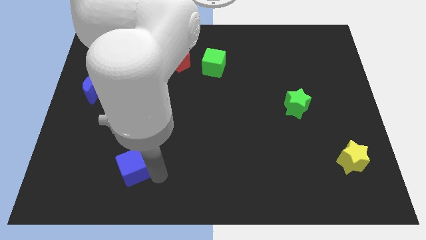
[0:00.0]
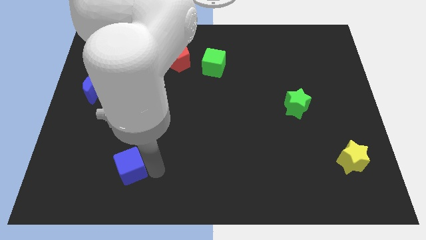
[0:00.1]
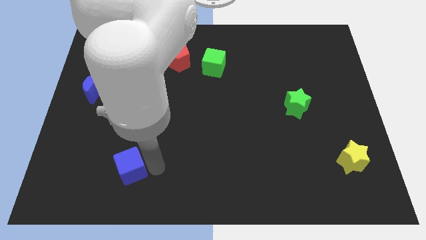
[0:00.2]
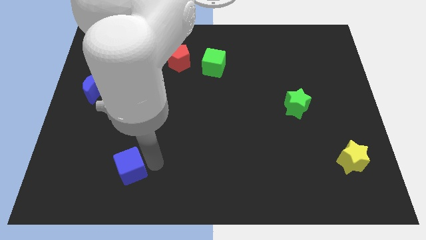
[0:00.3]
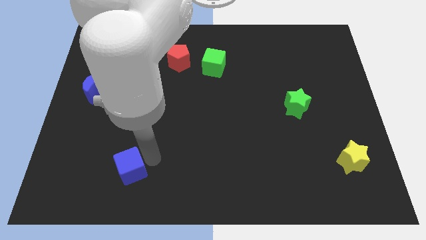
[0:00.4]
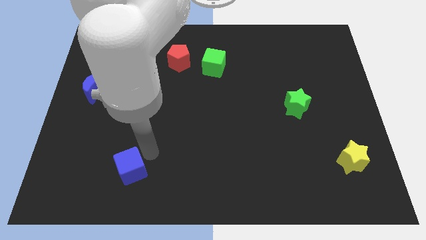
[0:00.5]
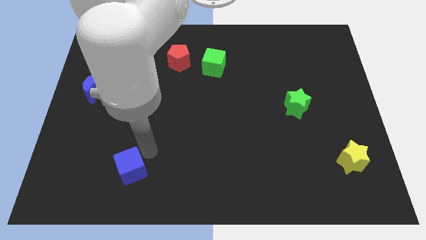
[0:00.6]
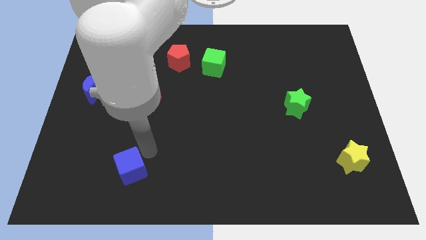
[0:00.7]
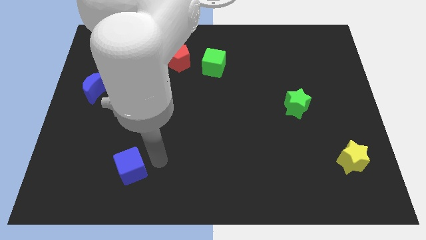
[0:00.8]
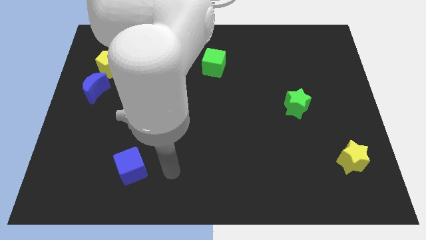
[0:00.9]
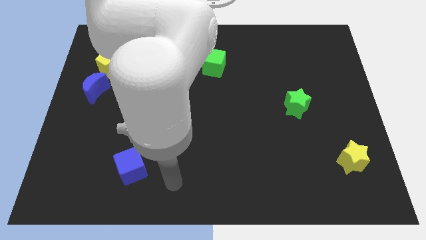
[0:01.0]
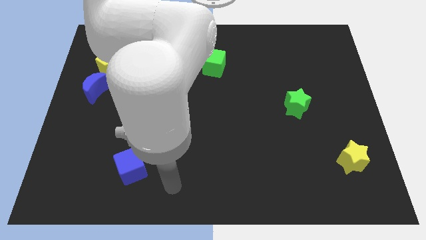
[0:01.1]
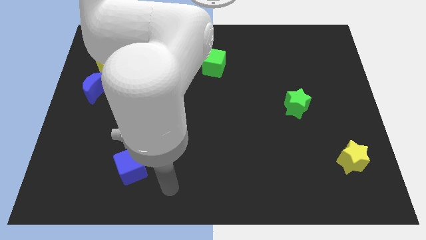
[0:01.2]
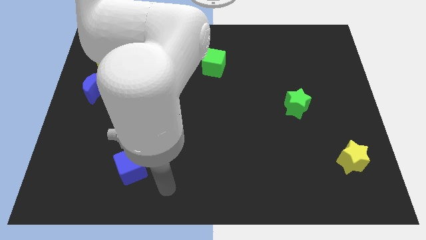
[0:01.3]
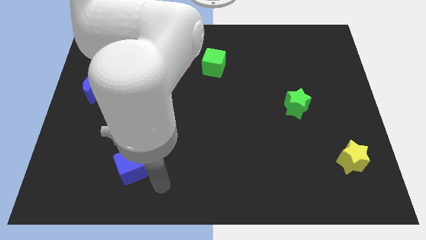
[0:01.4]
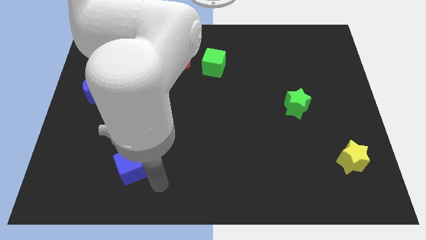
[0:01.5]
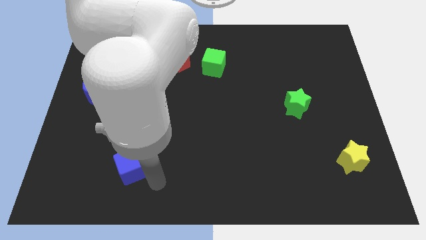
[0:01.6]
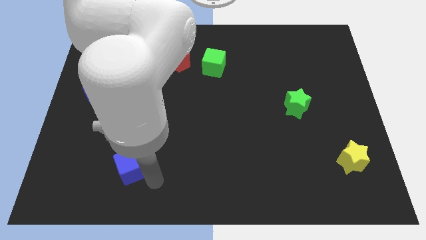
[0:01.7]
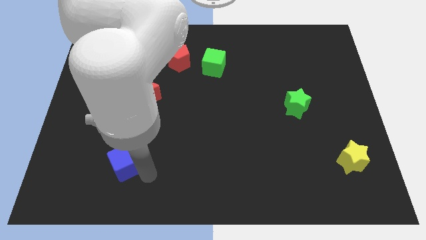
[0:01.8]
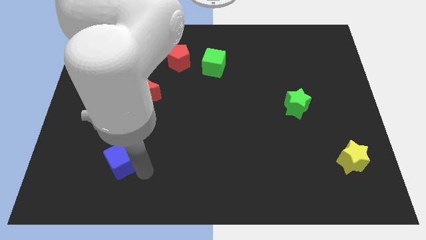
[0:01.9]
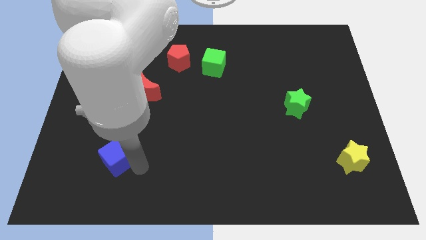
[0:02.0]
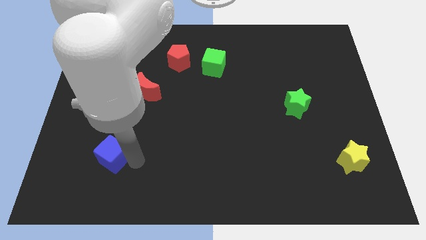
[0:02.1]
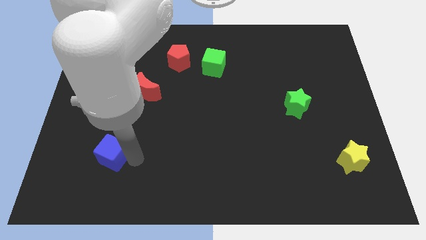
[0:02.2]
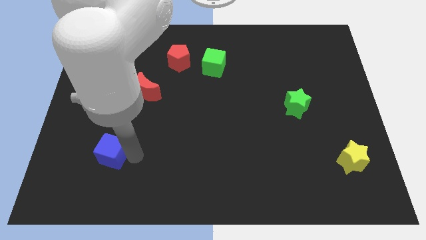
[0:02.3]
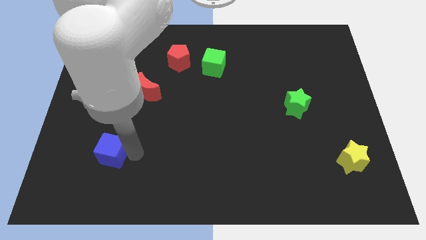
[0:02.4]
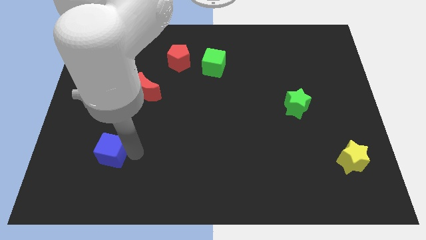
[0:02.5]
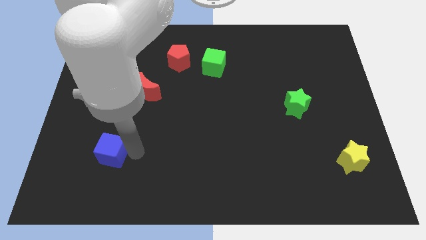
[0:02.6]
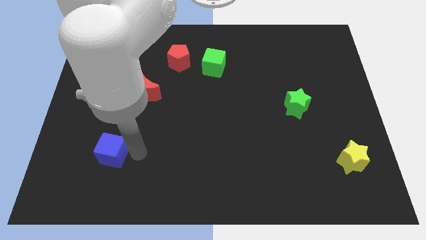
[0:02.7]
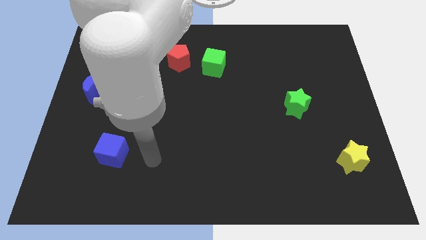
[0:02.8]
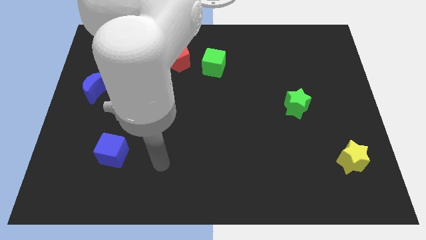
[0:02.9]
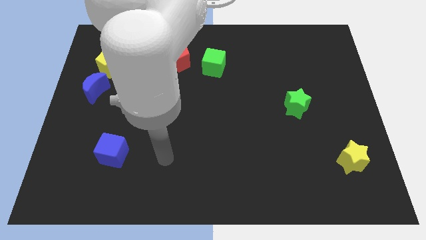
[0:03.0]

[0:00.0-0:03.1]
move the blue cube towards left side

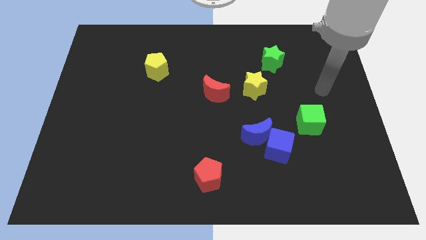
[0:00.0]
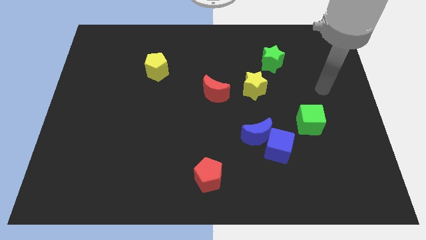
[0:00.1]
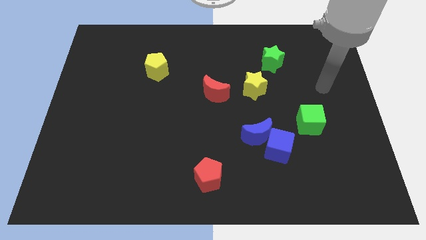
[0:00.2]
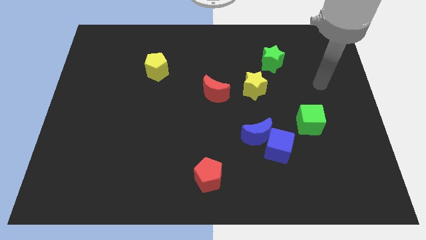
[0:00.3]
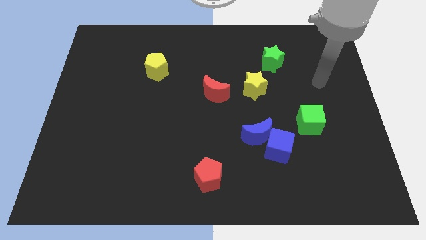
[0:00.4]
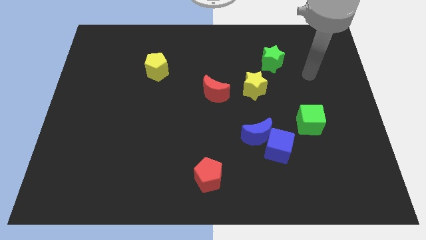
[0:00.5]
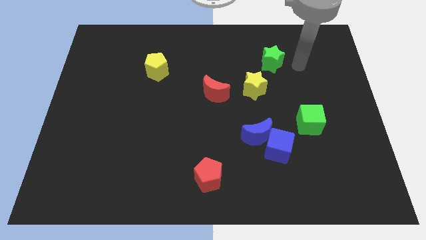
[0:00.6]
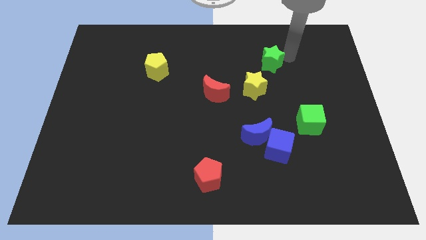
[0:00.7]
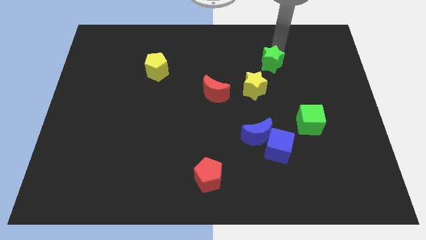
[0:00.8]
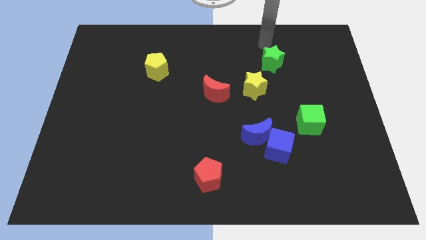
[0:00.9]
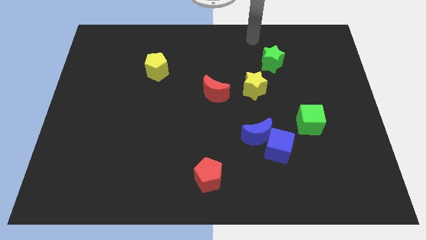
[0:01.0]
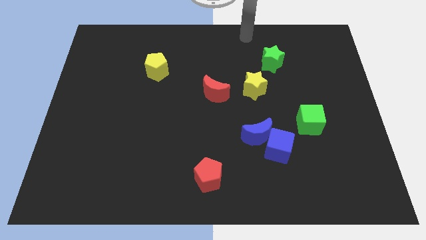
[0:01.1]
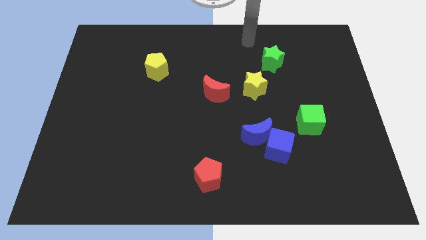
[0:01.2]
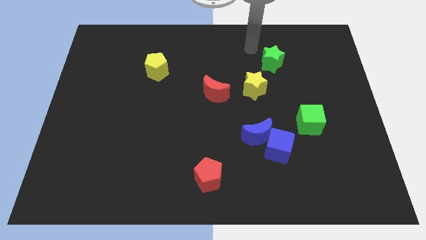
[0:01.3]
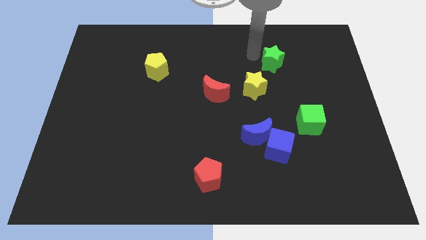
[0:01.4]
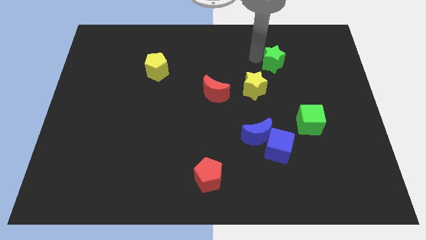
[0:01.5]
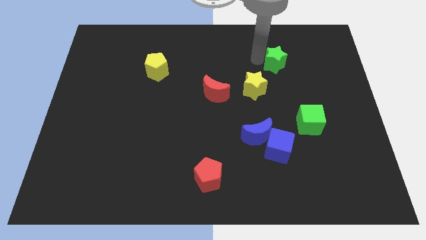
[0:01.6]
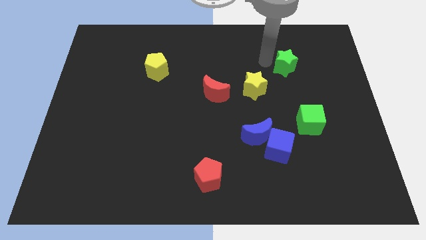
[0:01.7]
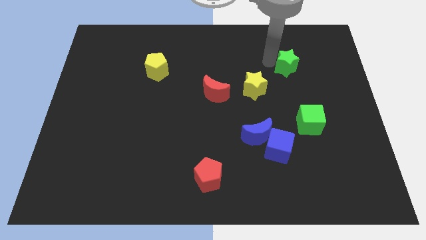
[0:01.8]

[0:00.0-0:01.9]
move arm near green star

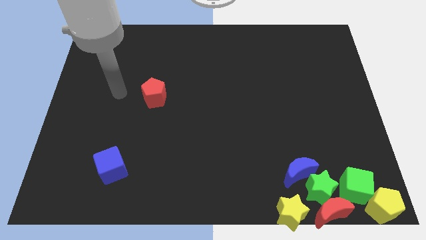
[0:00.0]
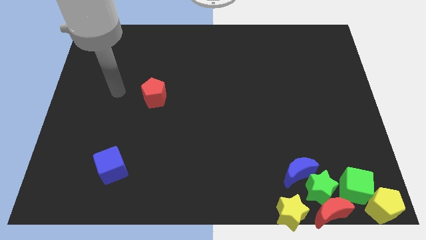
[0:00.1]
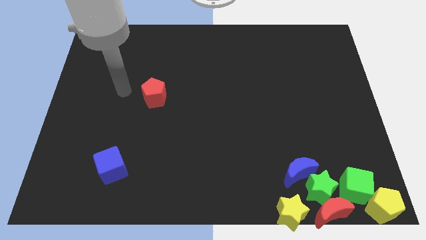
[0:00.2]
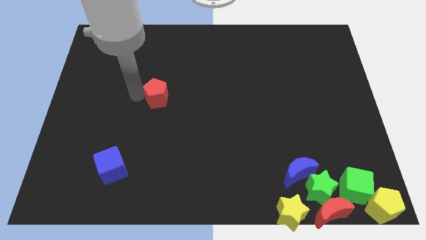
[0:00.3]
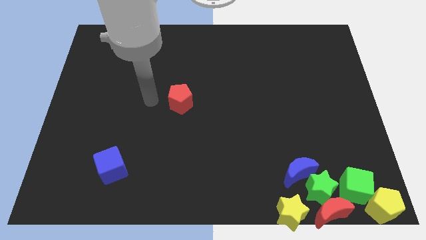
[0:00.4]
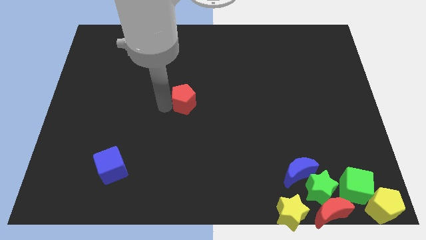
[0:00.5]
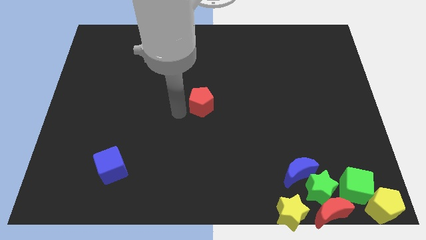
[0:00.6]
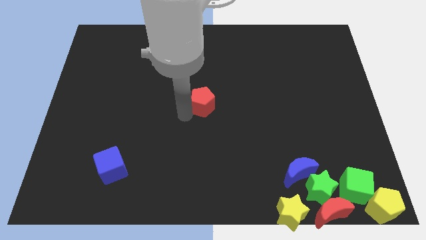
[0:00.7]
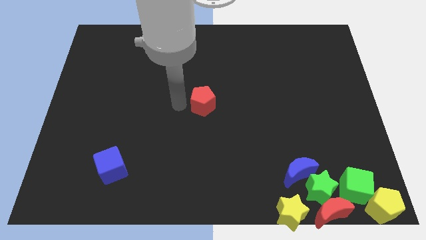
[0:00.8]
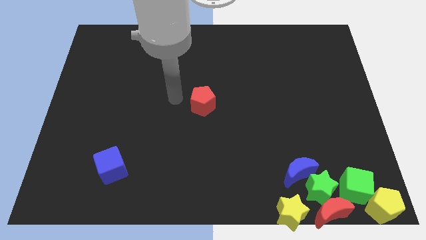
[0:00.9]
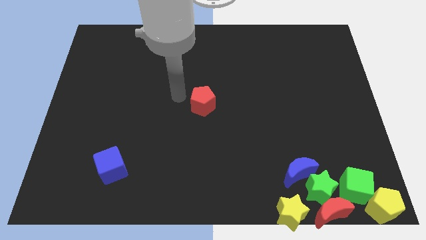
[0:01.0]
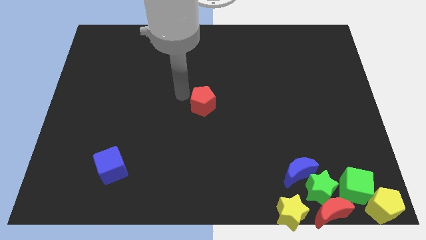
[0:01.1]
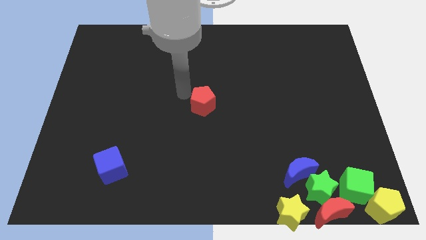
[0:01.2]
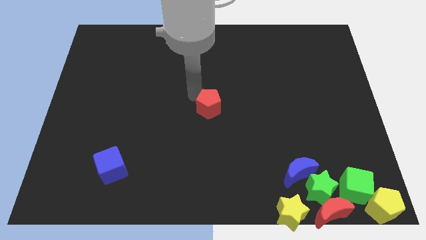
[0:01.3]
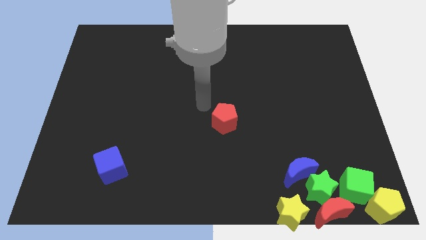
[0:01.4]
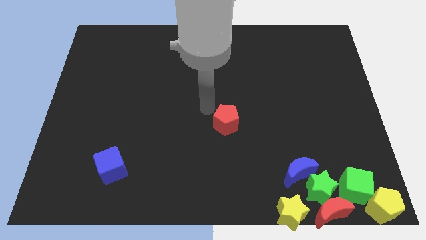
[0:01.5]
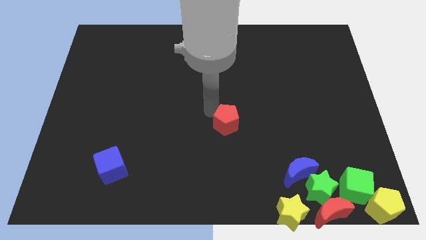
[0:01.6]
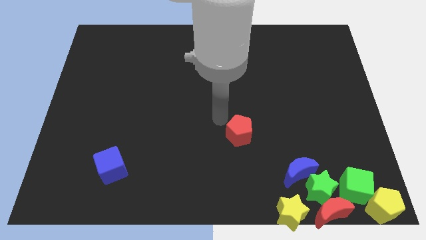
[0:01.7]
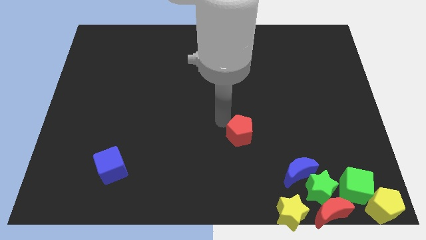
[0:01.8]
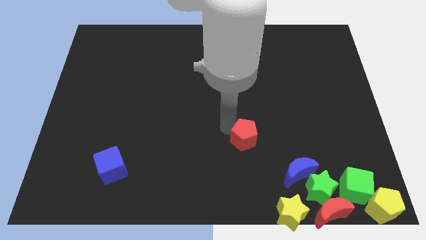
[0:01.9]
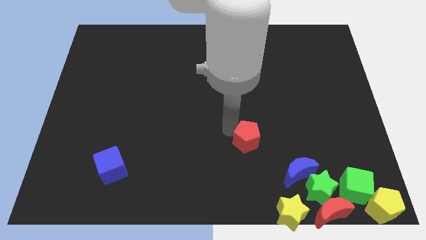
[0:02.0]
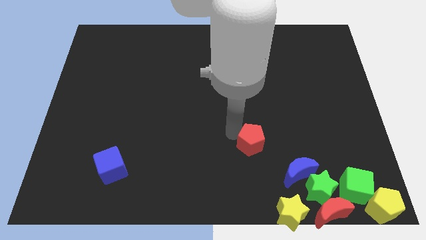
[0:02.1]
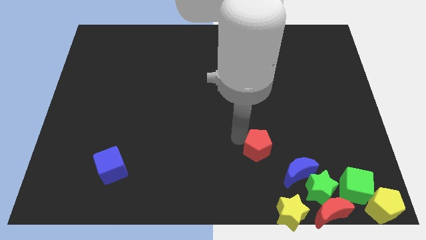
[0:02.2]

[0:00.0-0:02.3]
slide the red pentagon towards the blue semicircle

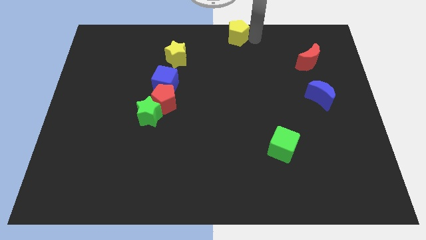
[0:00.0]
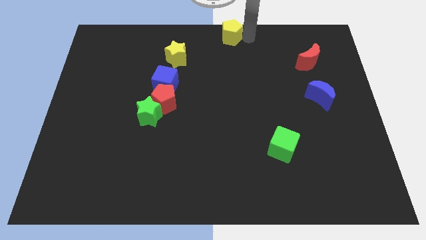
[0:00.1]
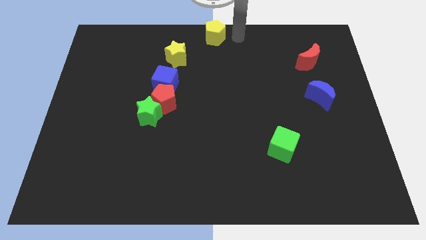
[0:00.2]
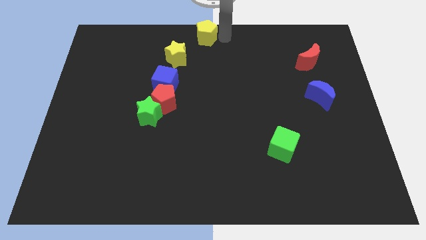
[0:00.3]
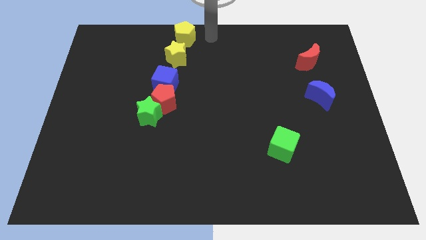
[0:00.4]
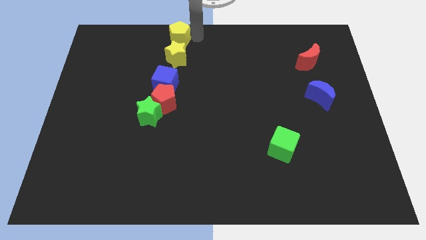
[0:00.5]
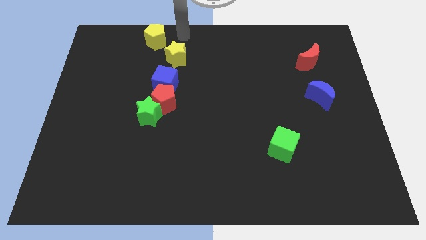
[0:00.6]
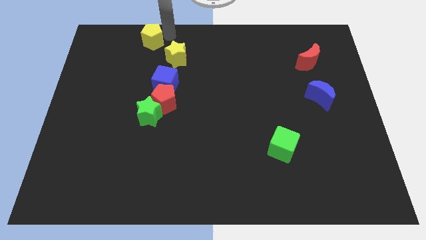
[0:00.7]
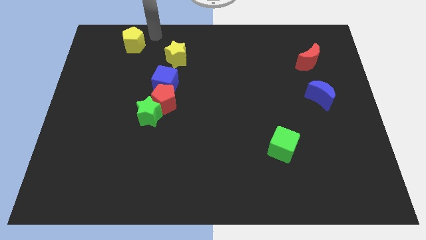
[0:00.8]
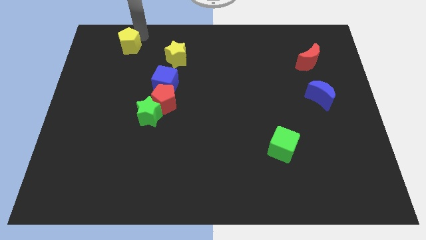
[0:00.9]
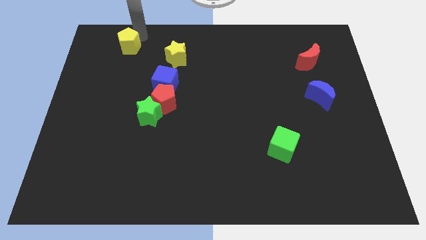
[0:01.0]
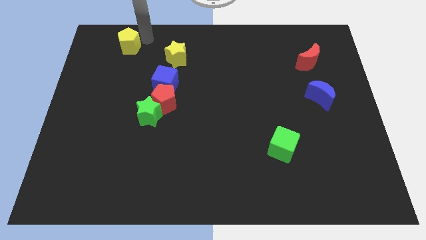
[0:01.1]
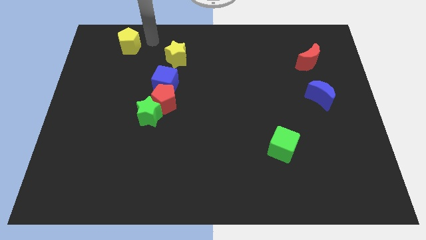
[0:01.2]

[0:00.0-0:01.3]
move yellow pentagon towards left
